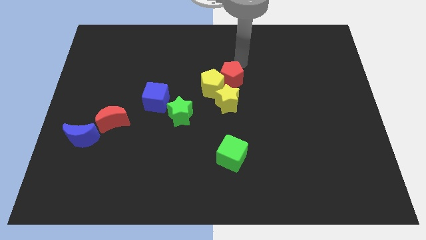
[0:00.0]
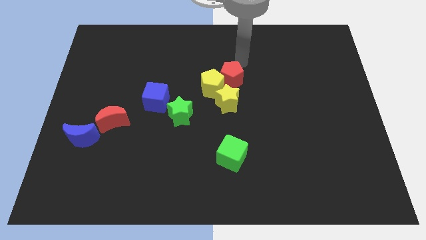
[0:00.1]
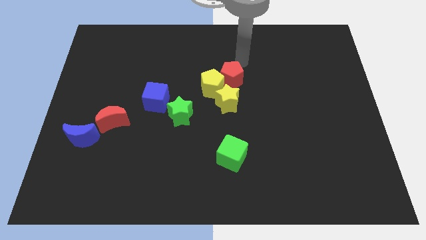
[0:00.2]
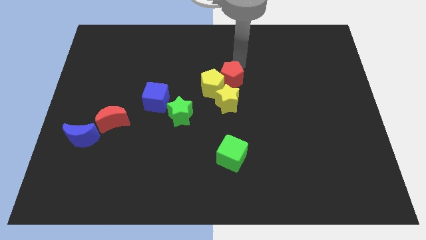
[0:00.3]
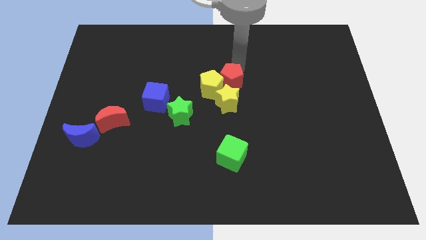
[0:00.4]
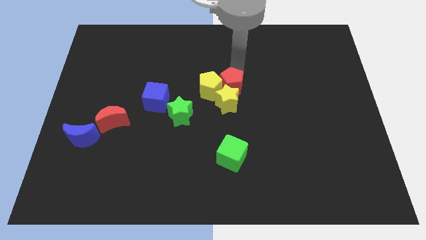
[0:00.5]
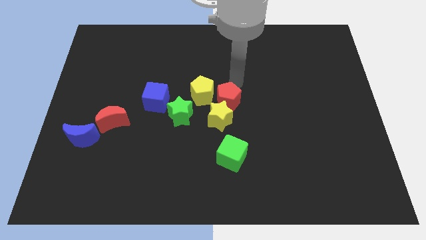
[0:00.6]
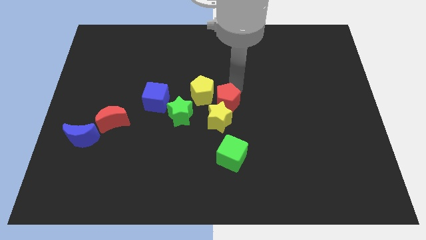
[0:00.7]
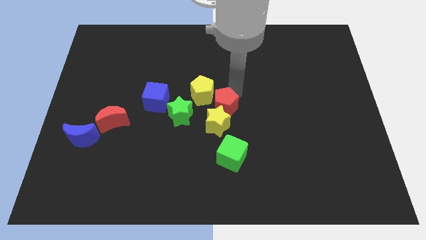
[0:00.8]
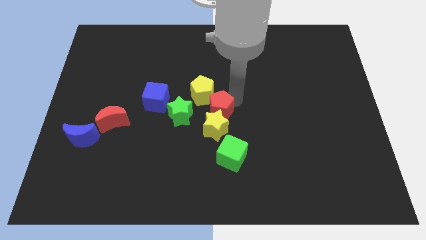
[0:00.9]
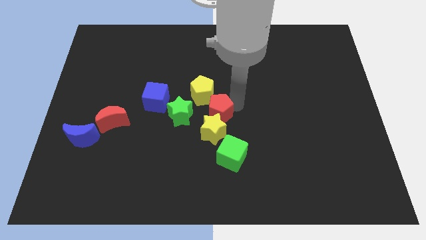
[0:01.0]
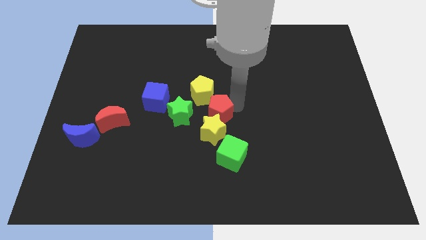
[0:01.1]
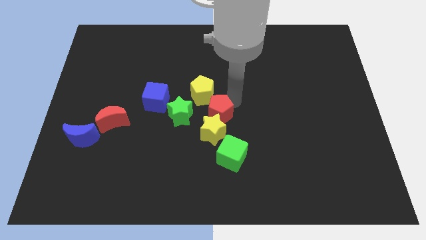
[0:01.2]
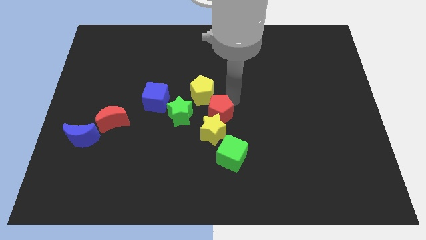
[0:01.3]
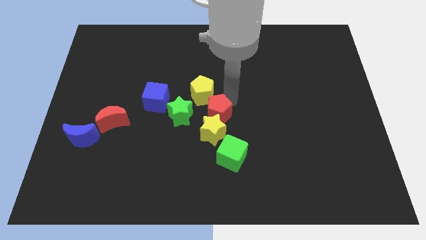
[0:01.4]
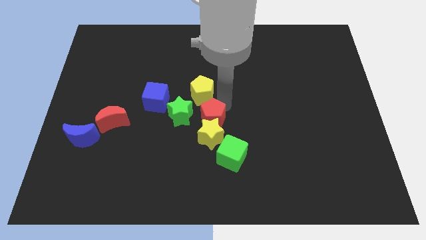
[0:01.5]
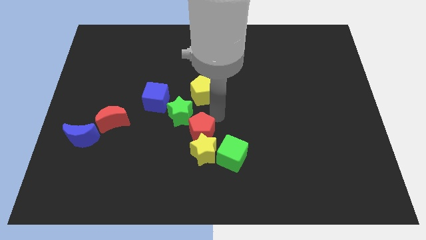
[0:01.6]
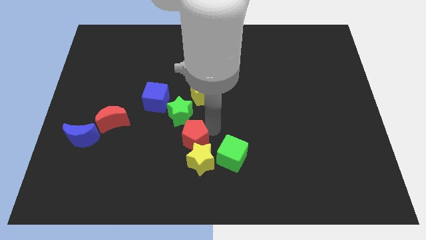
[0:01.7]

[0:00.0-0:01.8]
push the red pentagon in to yellow star

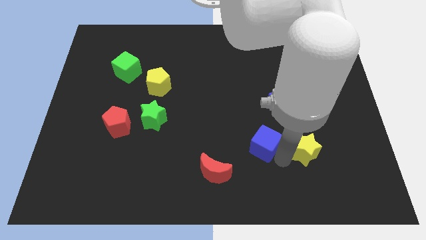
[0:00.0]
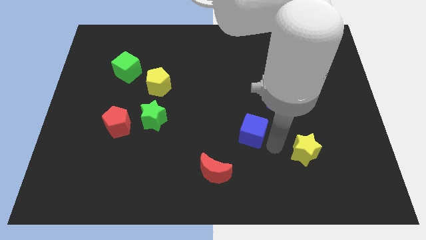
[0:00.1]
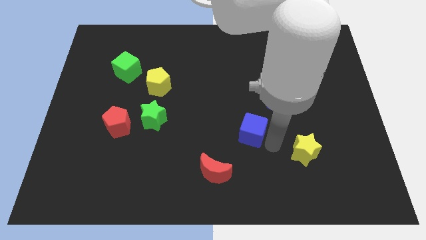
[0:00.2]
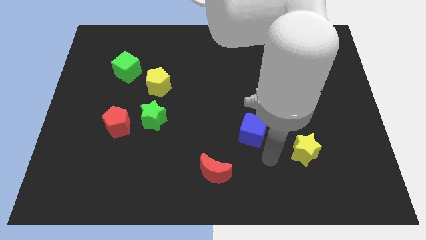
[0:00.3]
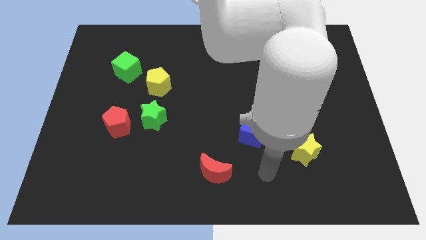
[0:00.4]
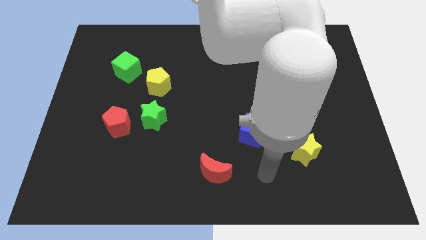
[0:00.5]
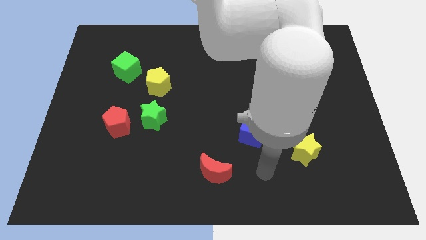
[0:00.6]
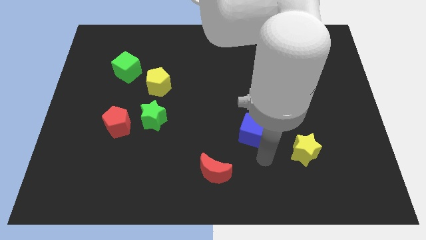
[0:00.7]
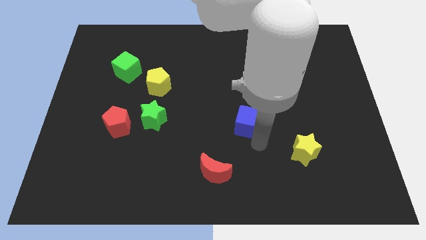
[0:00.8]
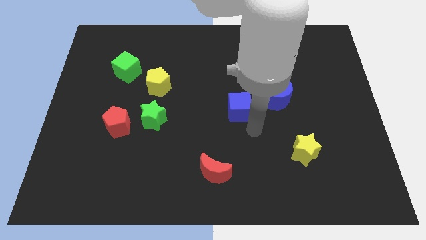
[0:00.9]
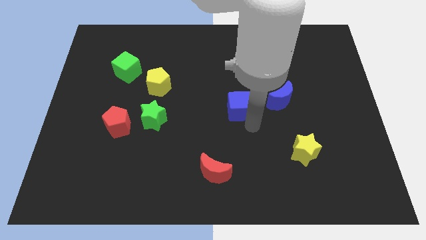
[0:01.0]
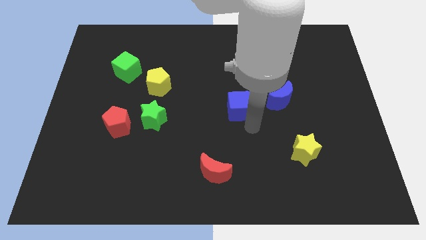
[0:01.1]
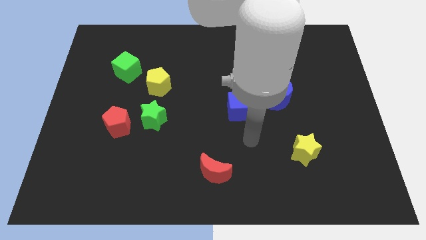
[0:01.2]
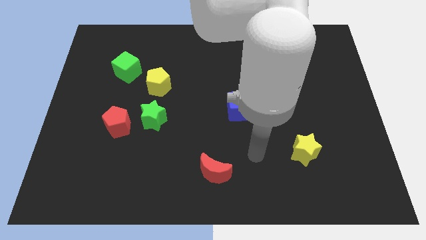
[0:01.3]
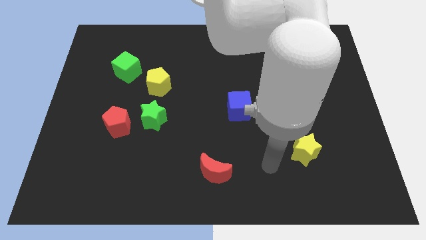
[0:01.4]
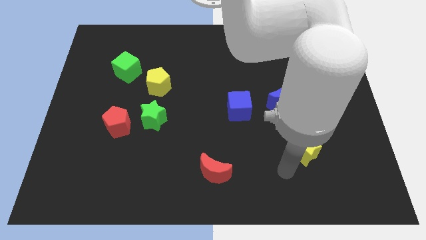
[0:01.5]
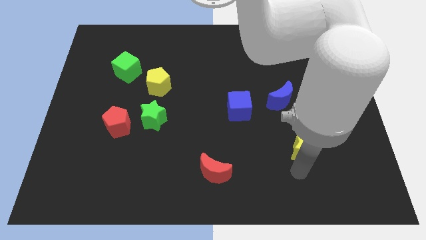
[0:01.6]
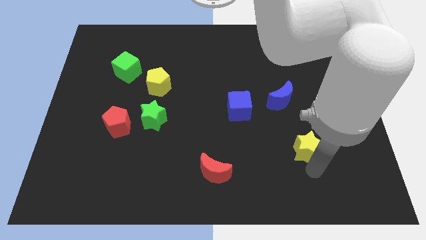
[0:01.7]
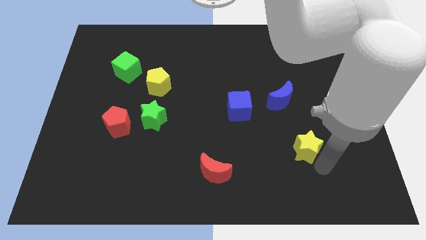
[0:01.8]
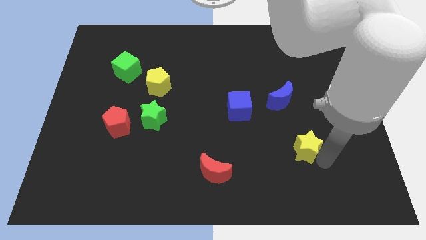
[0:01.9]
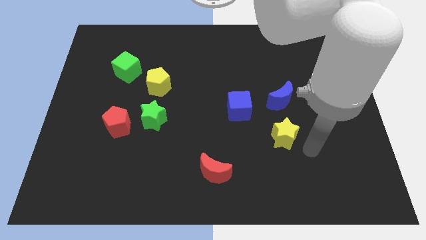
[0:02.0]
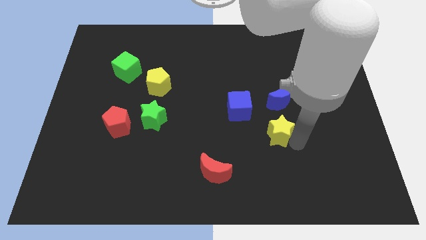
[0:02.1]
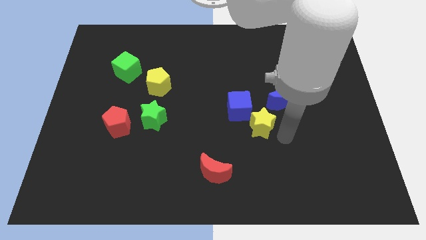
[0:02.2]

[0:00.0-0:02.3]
slide the blue cube to the center of the board

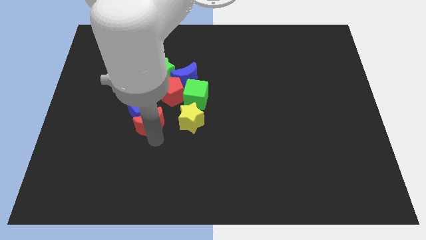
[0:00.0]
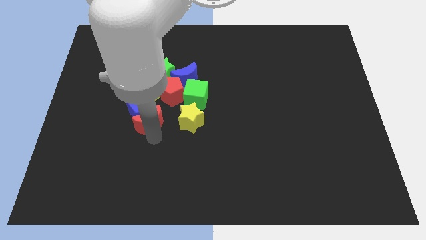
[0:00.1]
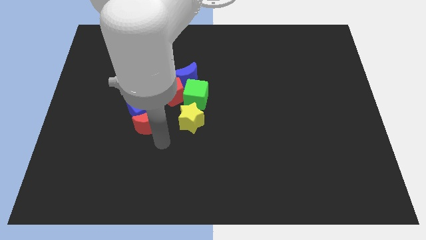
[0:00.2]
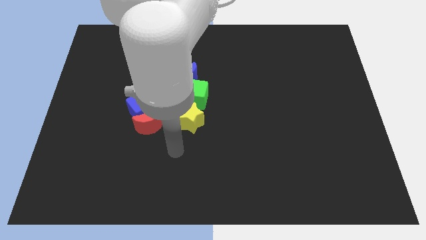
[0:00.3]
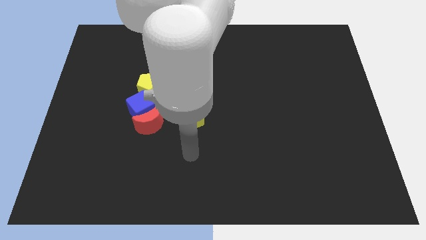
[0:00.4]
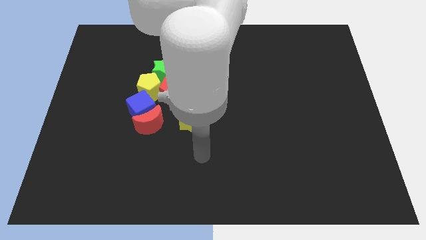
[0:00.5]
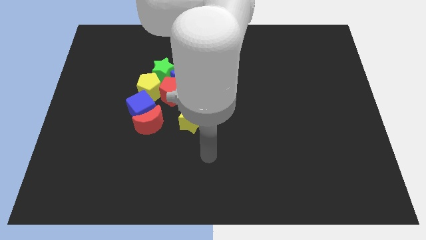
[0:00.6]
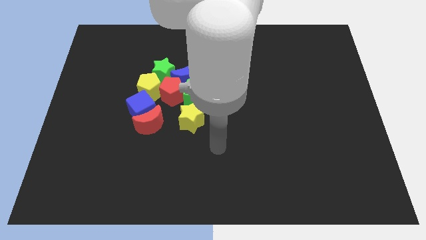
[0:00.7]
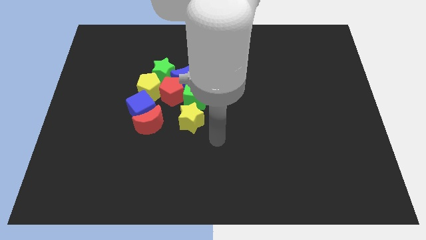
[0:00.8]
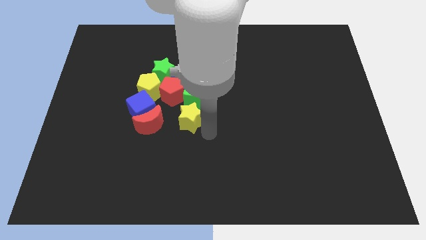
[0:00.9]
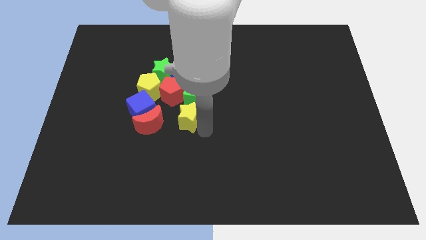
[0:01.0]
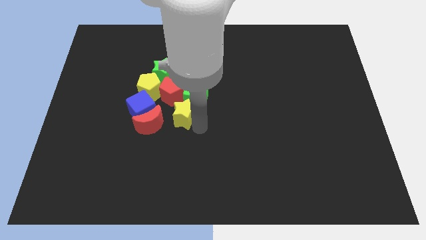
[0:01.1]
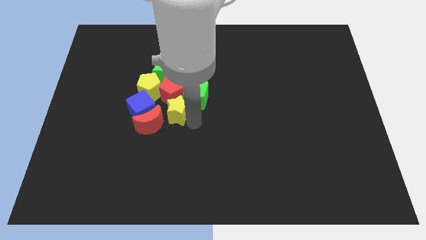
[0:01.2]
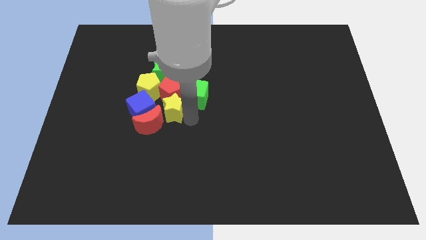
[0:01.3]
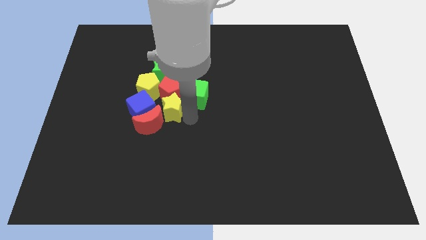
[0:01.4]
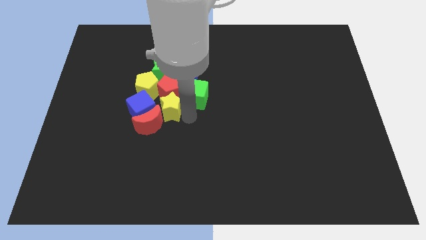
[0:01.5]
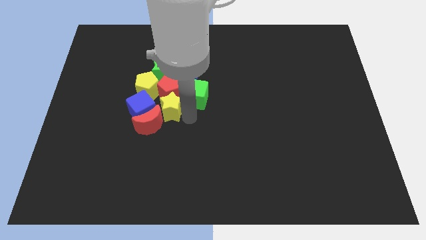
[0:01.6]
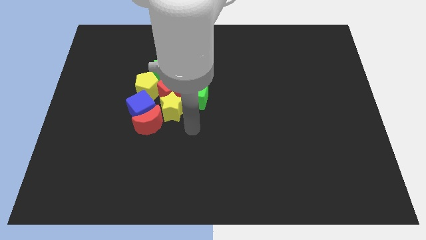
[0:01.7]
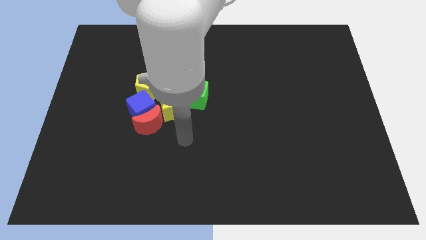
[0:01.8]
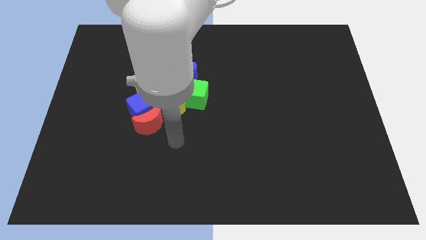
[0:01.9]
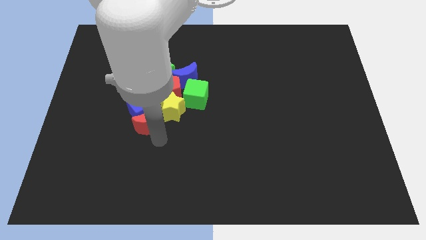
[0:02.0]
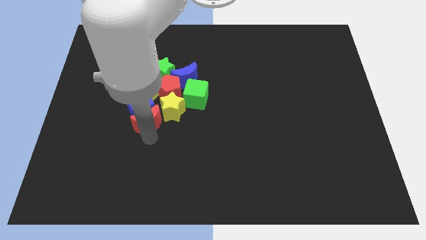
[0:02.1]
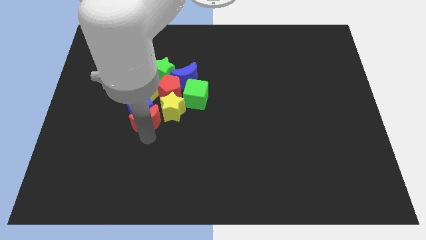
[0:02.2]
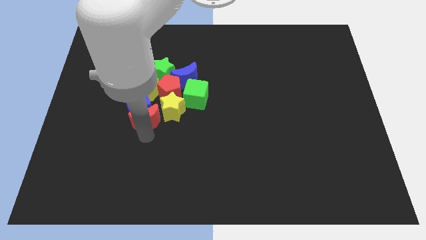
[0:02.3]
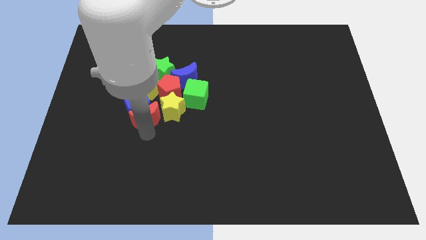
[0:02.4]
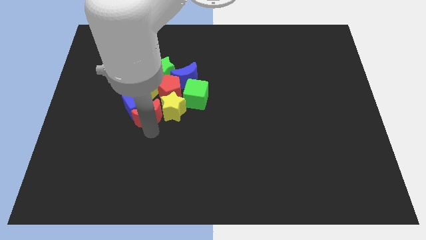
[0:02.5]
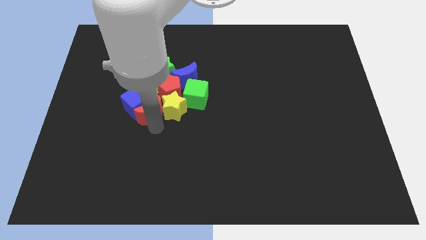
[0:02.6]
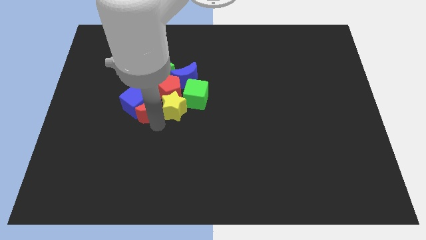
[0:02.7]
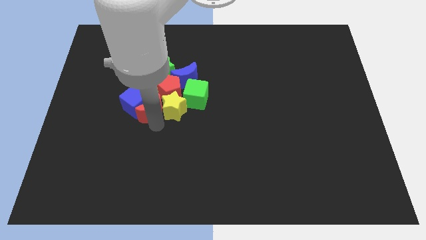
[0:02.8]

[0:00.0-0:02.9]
push the yellow star into the red pentagon

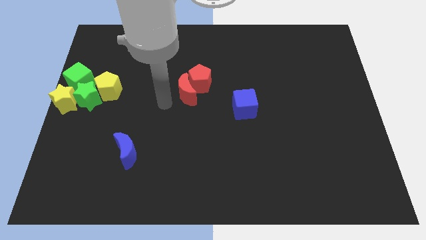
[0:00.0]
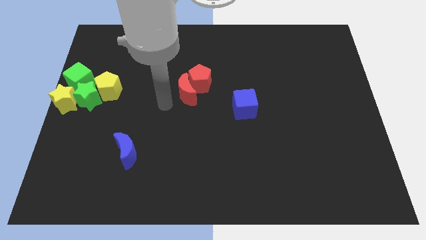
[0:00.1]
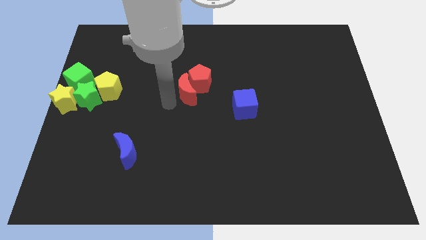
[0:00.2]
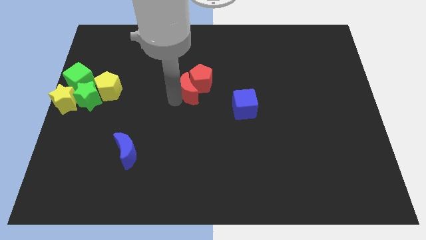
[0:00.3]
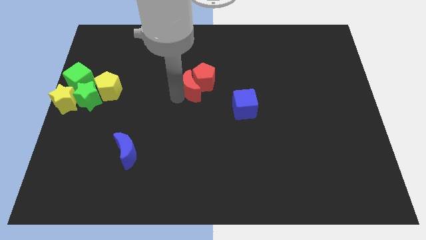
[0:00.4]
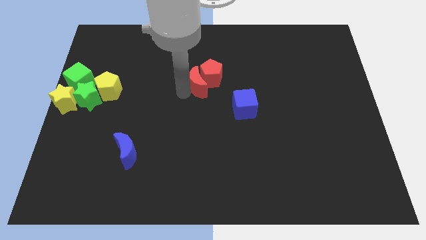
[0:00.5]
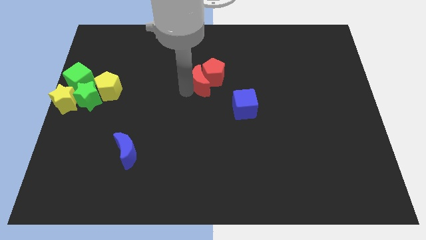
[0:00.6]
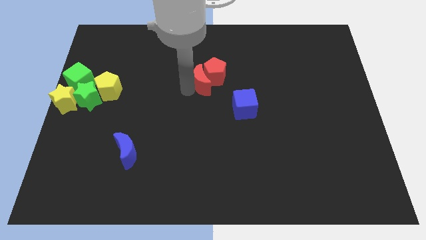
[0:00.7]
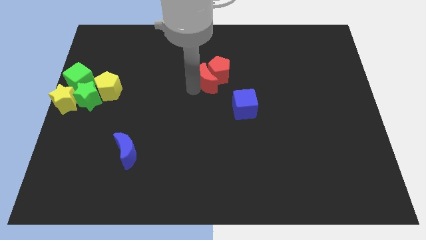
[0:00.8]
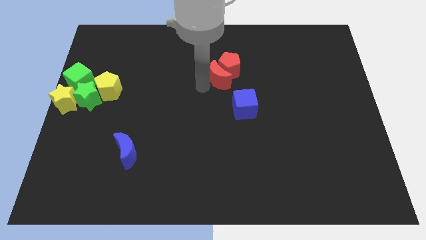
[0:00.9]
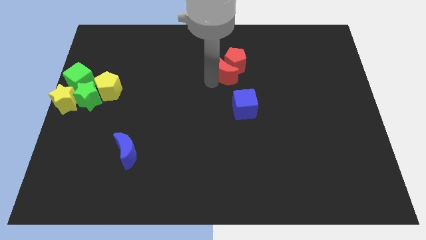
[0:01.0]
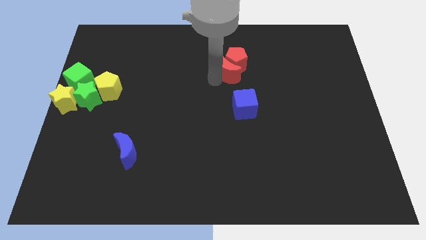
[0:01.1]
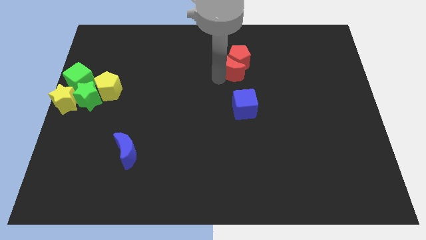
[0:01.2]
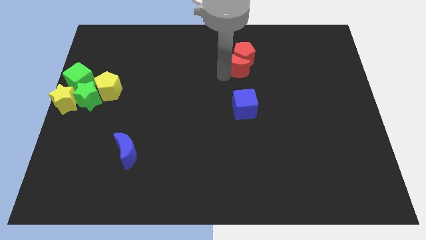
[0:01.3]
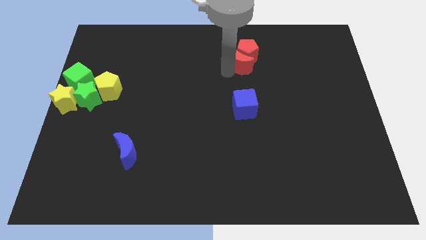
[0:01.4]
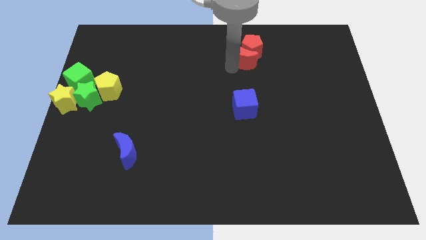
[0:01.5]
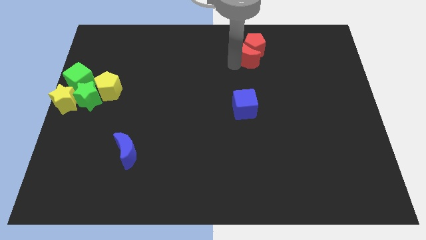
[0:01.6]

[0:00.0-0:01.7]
move the red crescent along with red pentagon

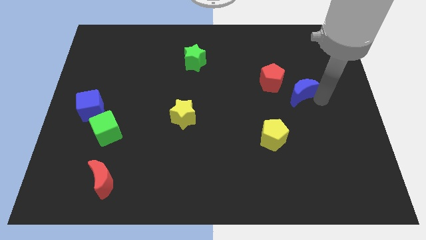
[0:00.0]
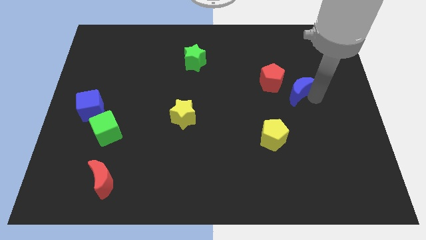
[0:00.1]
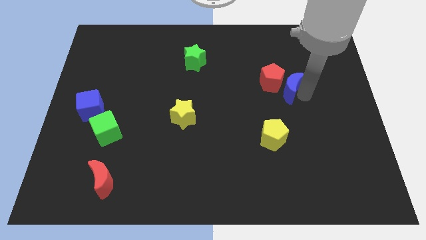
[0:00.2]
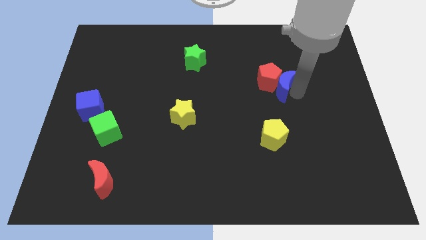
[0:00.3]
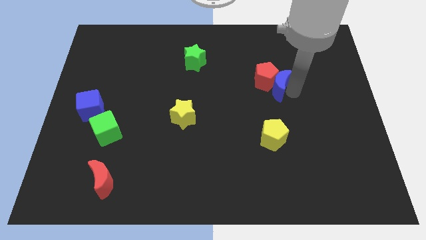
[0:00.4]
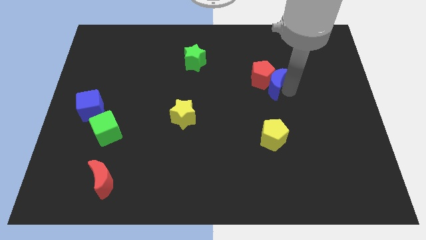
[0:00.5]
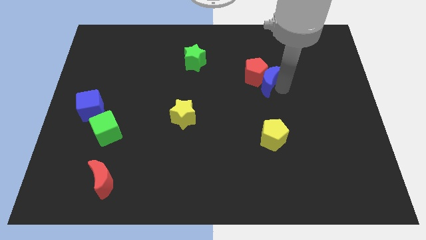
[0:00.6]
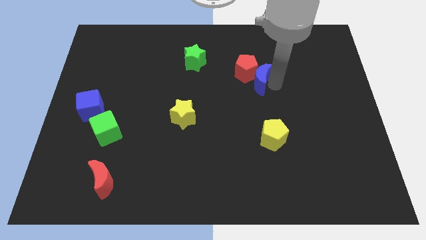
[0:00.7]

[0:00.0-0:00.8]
push the blue crescent to the right of the red pentagon
